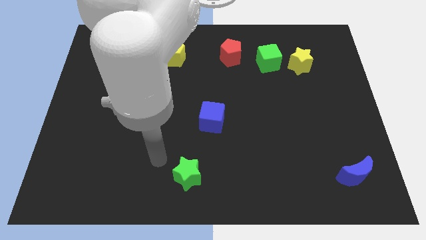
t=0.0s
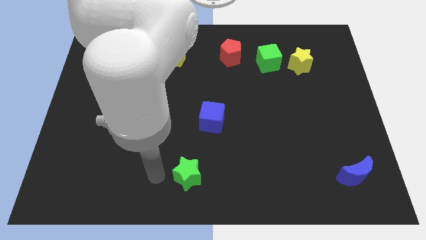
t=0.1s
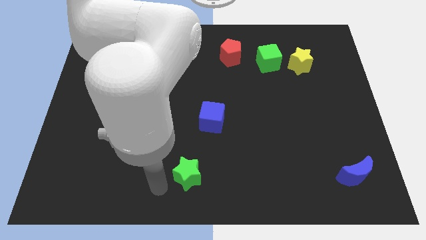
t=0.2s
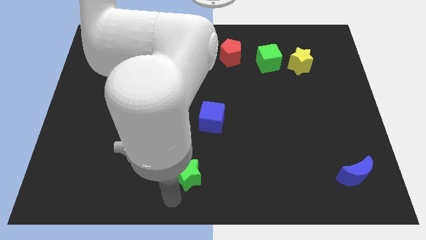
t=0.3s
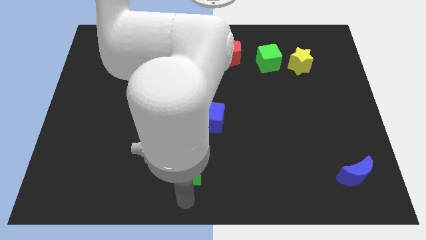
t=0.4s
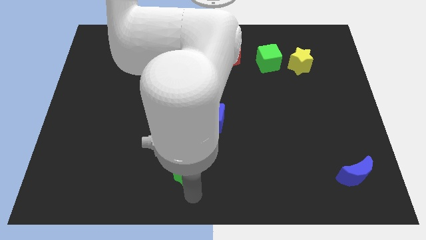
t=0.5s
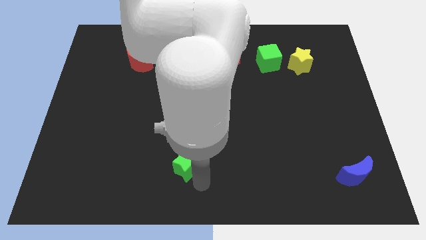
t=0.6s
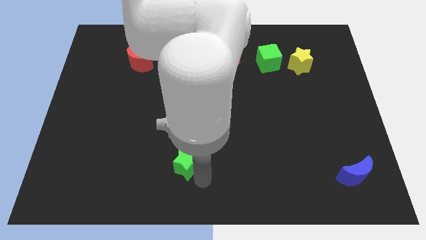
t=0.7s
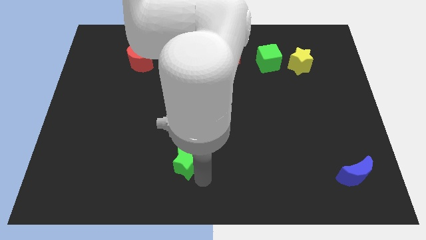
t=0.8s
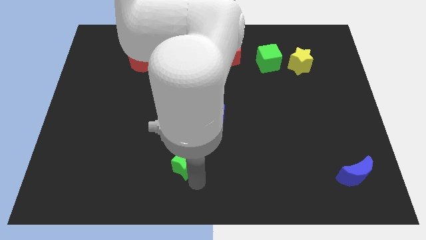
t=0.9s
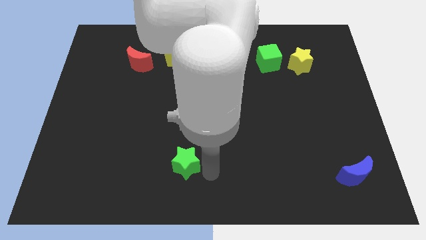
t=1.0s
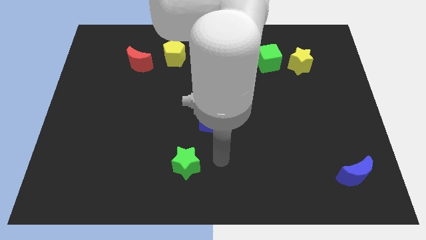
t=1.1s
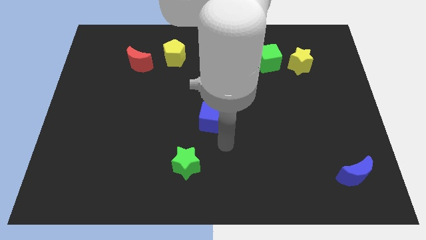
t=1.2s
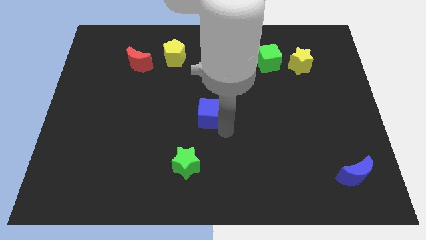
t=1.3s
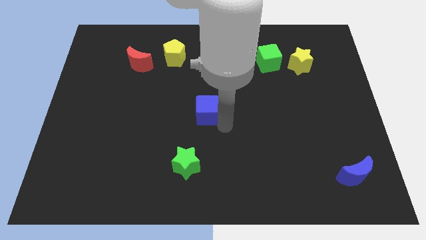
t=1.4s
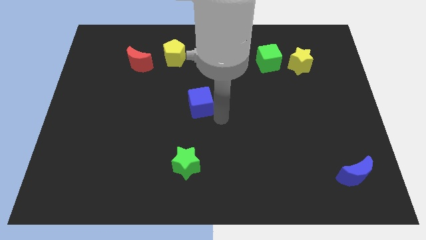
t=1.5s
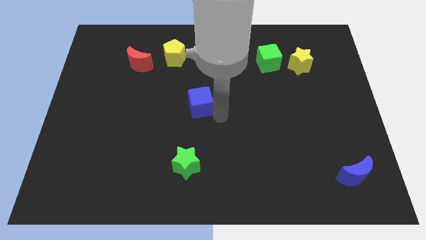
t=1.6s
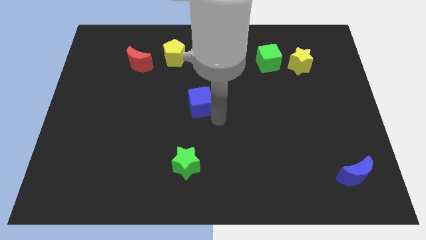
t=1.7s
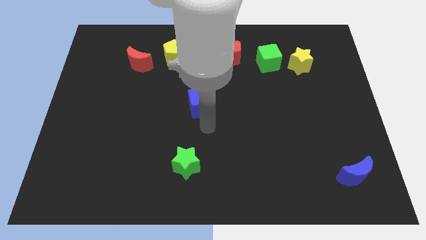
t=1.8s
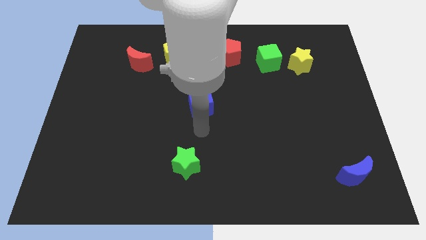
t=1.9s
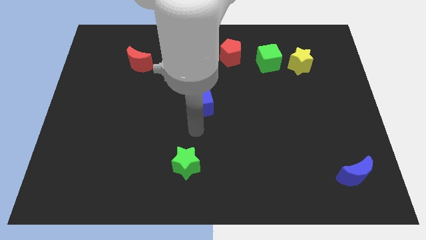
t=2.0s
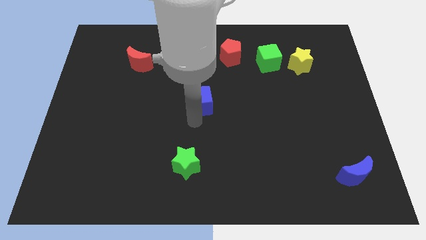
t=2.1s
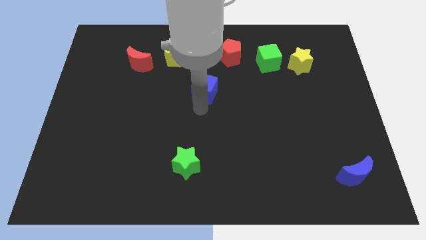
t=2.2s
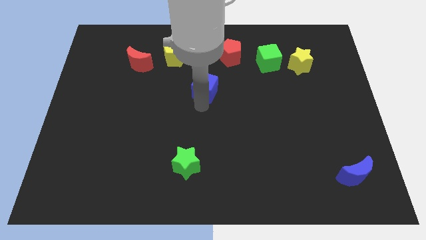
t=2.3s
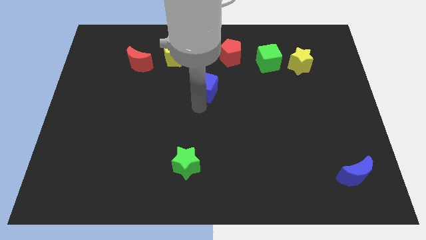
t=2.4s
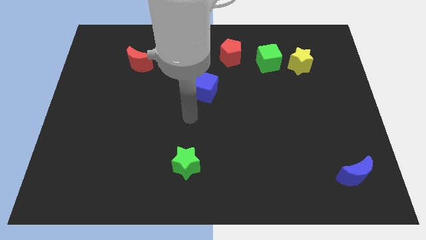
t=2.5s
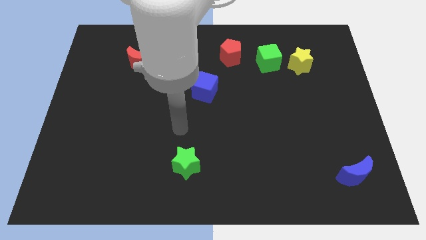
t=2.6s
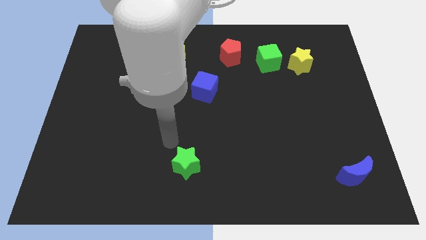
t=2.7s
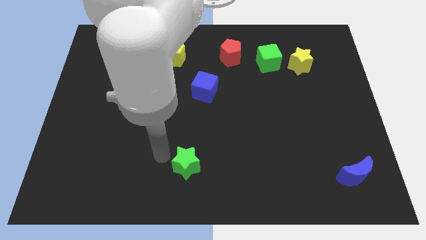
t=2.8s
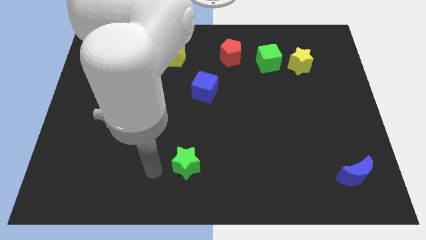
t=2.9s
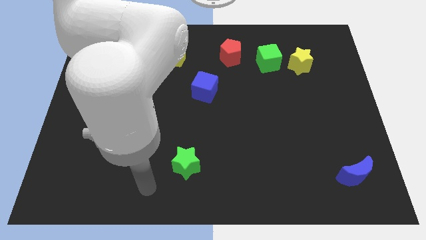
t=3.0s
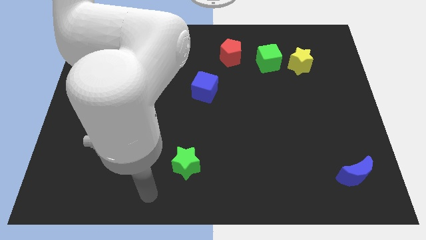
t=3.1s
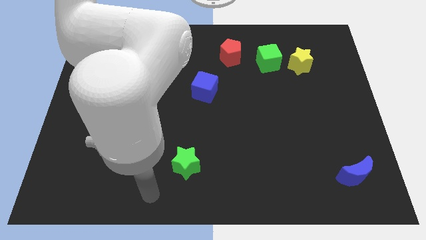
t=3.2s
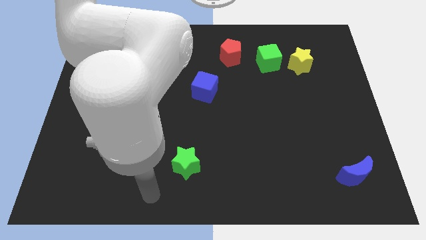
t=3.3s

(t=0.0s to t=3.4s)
push the green star and blue cube slightly upwards

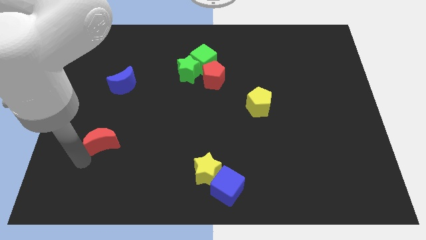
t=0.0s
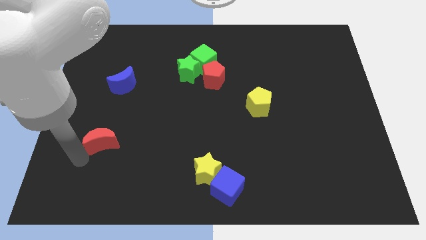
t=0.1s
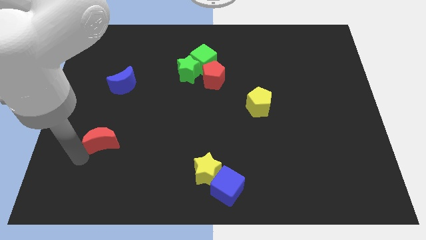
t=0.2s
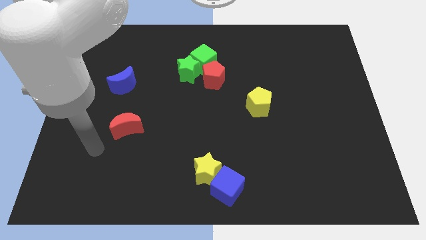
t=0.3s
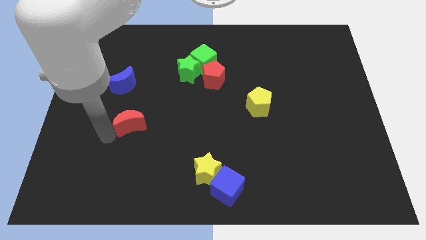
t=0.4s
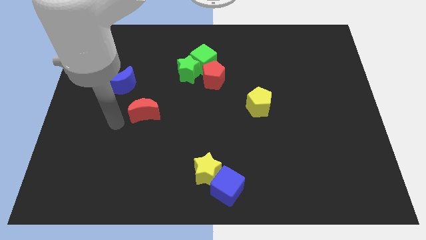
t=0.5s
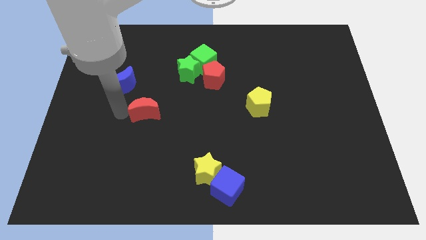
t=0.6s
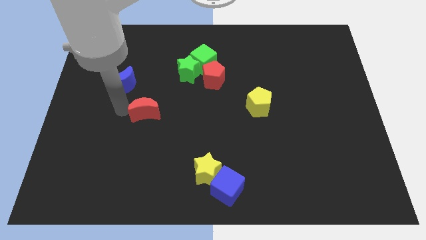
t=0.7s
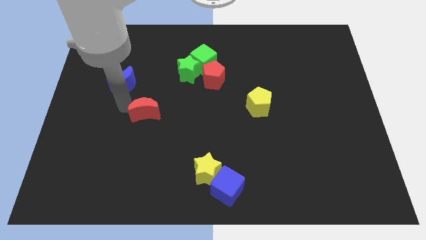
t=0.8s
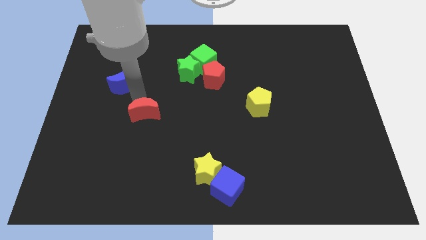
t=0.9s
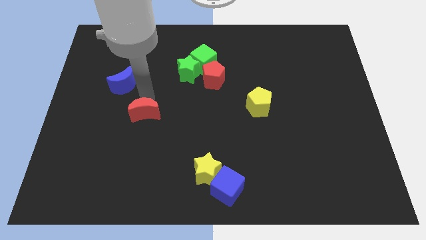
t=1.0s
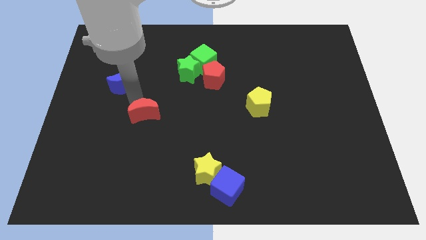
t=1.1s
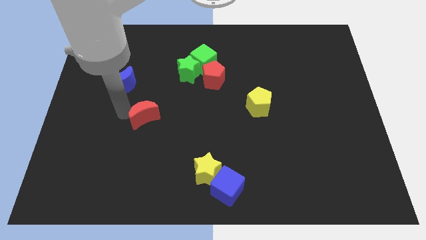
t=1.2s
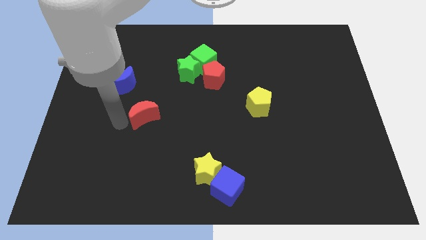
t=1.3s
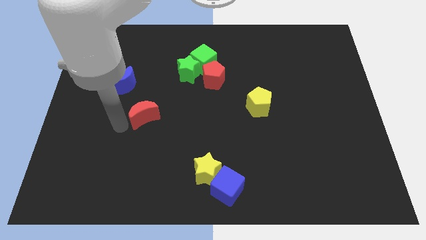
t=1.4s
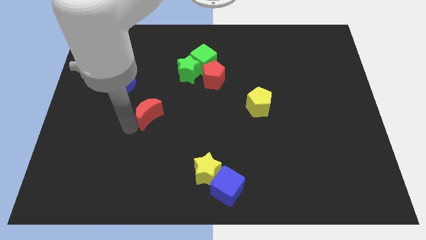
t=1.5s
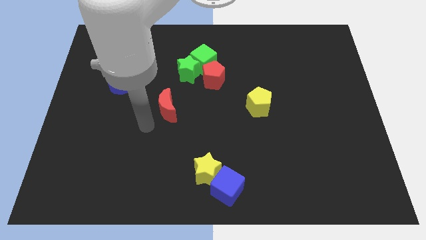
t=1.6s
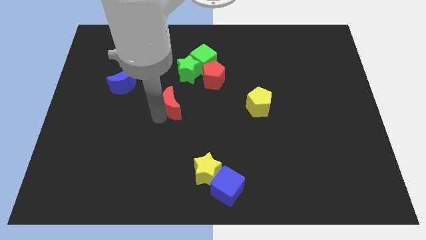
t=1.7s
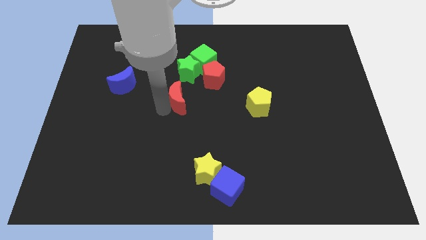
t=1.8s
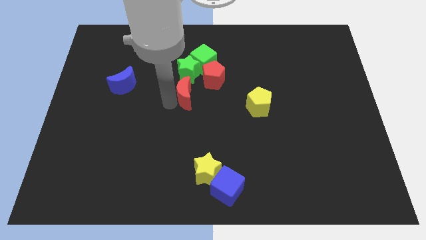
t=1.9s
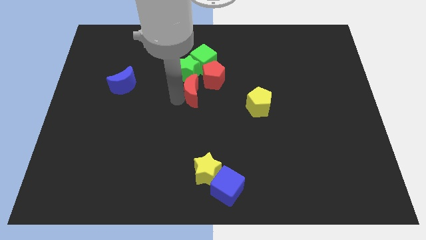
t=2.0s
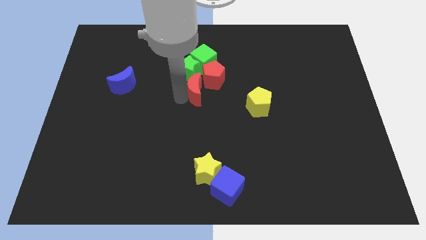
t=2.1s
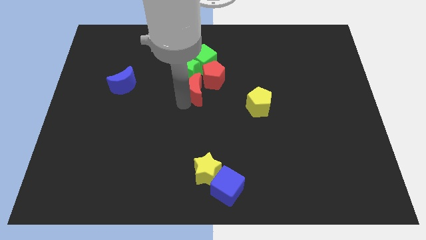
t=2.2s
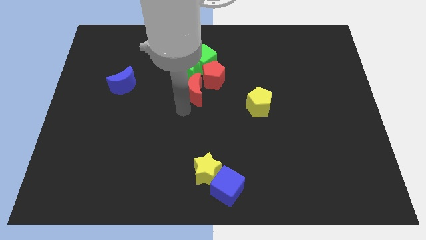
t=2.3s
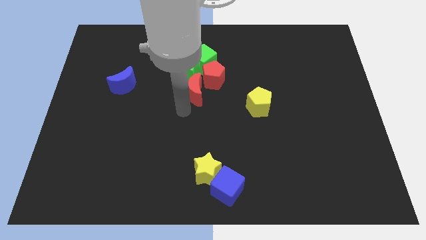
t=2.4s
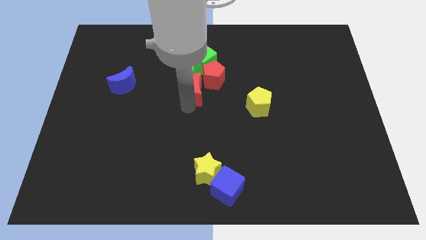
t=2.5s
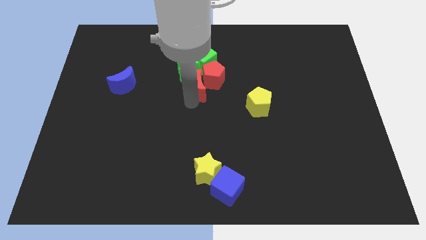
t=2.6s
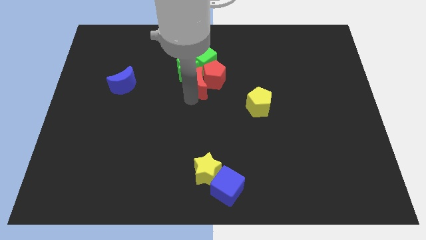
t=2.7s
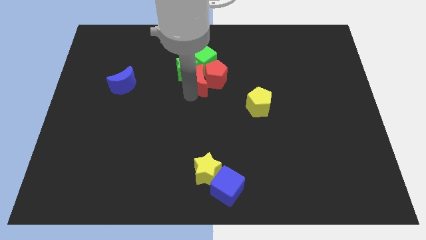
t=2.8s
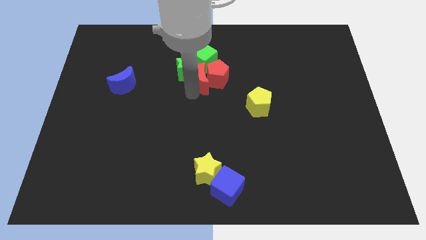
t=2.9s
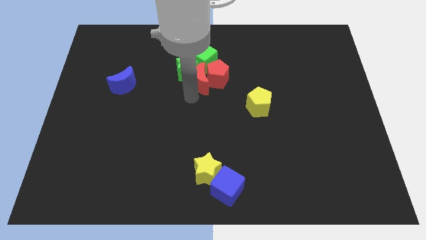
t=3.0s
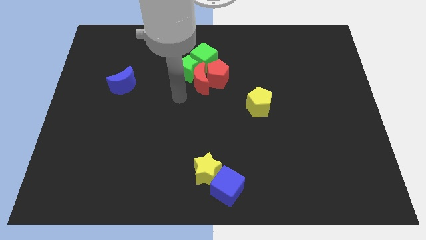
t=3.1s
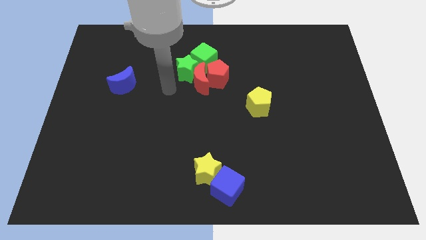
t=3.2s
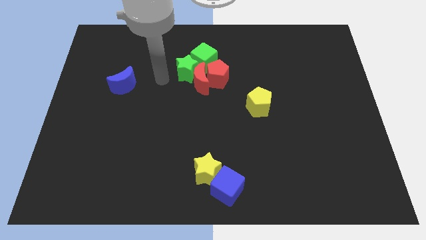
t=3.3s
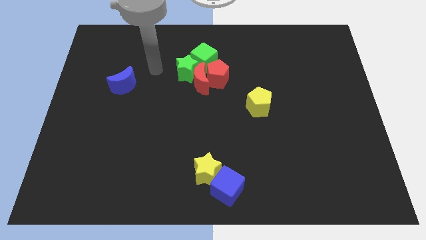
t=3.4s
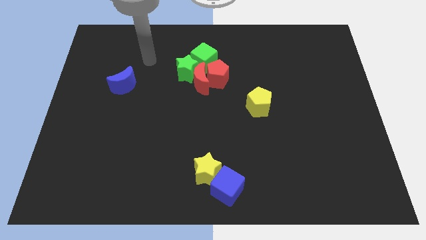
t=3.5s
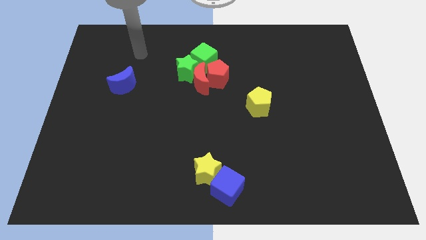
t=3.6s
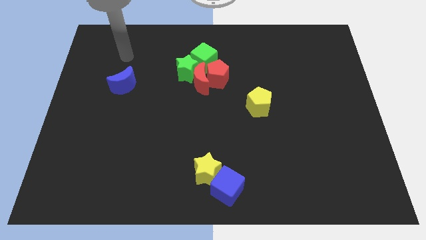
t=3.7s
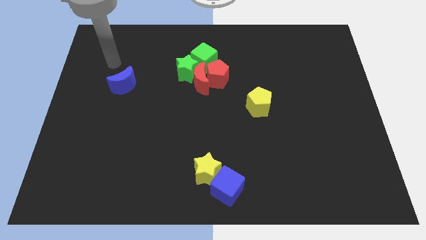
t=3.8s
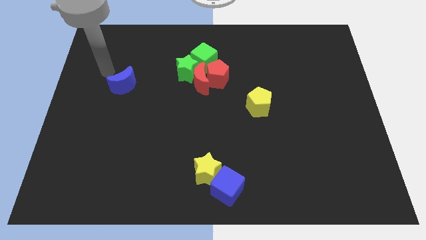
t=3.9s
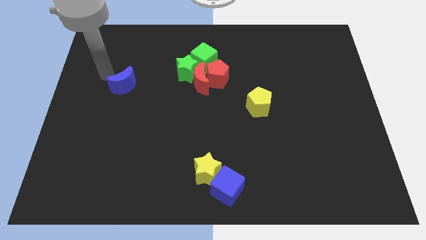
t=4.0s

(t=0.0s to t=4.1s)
place the red crescent near the red pentagon

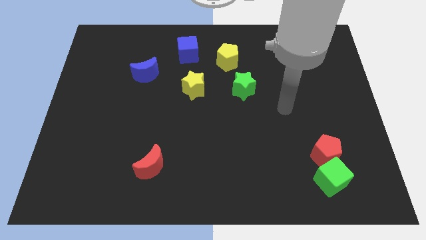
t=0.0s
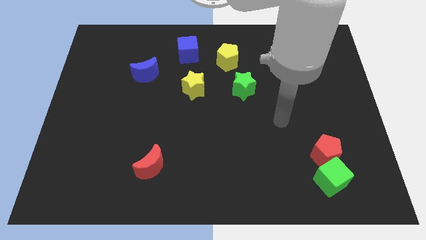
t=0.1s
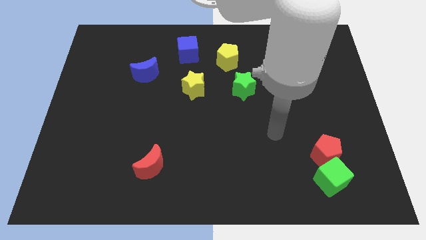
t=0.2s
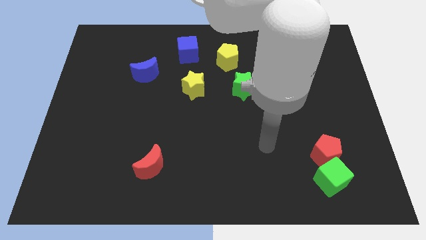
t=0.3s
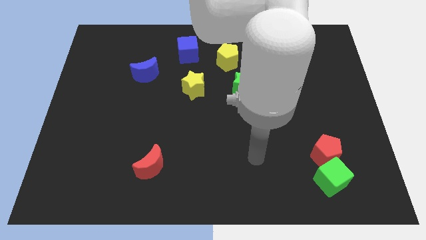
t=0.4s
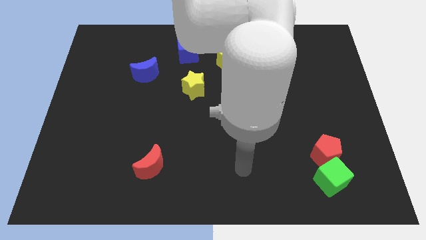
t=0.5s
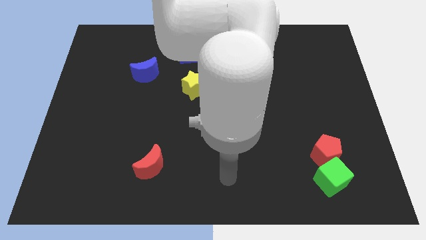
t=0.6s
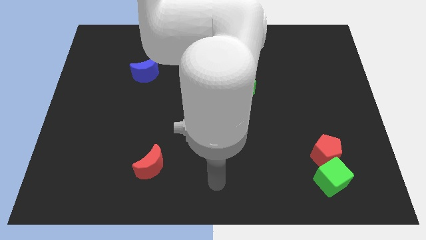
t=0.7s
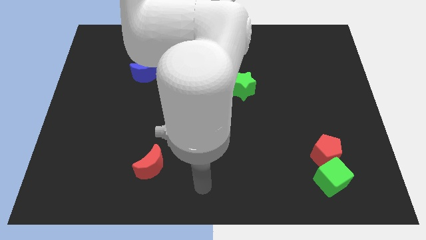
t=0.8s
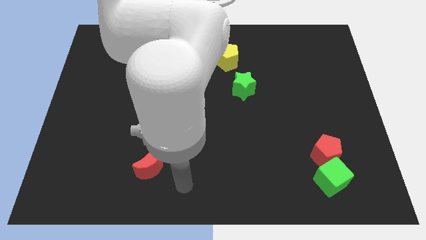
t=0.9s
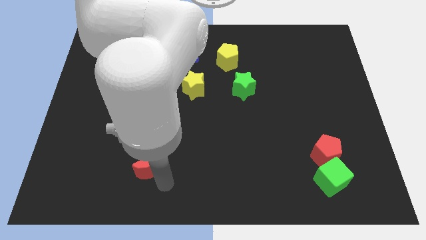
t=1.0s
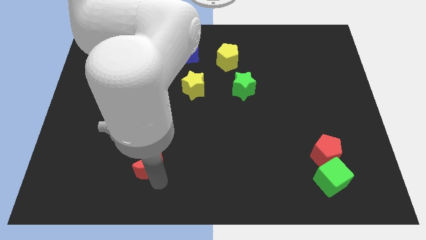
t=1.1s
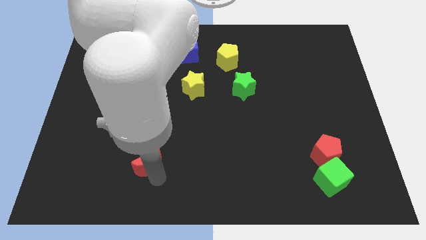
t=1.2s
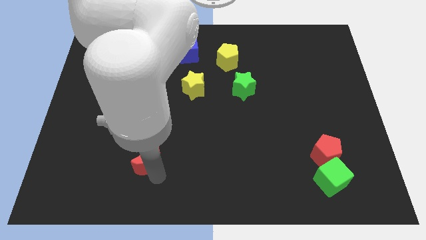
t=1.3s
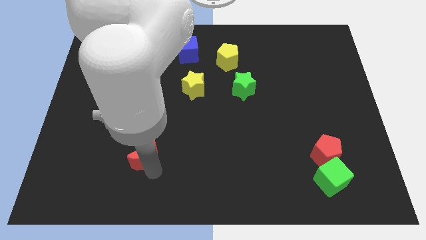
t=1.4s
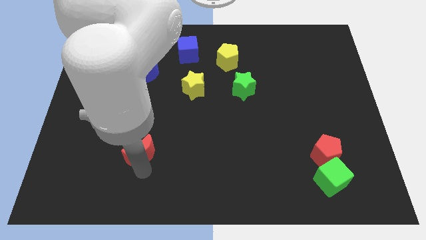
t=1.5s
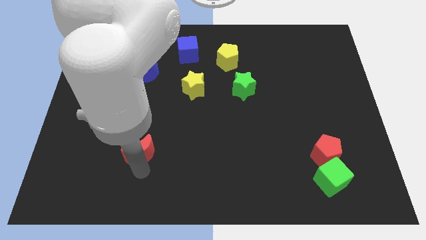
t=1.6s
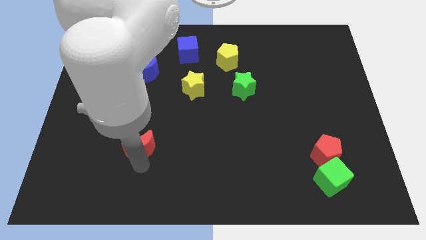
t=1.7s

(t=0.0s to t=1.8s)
push the red moon towards the top side
